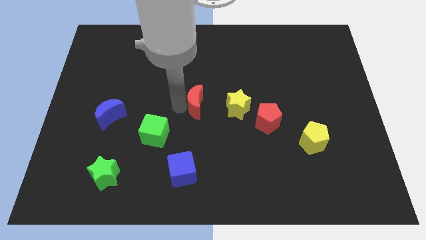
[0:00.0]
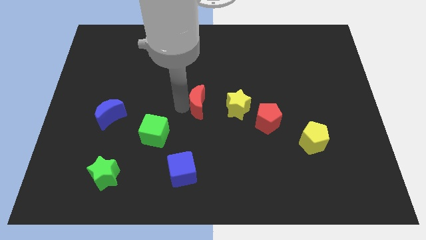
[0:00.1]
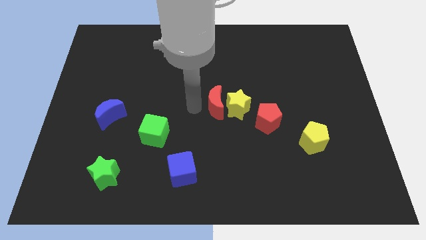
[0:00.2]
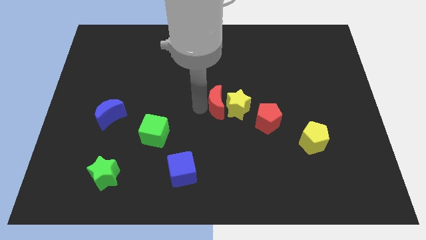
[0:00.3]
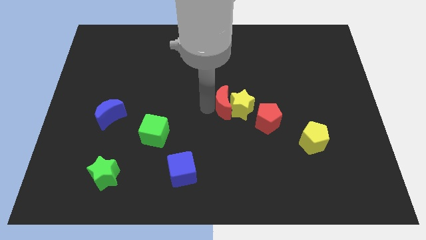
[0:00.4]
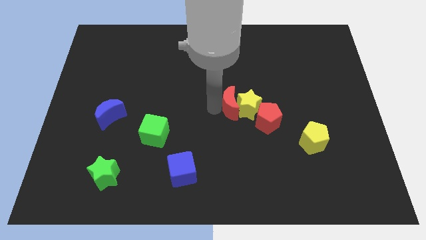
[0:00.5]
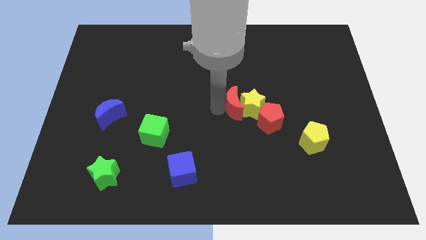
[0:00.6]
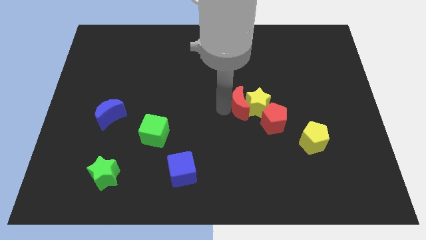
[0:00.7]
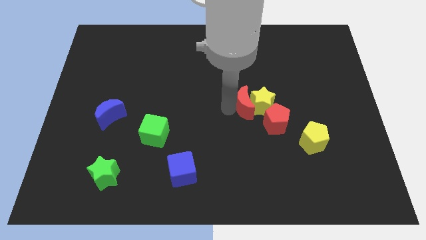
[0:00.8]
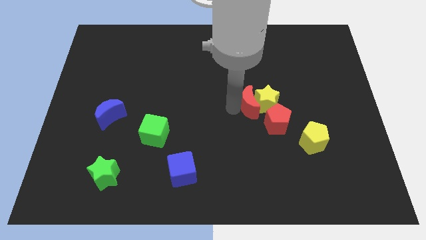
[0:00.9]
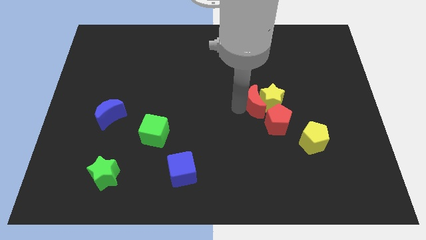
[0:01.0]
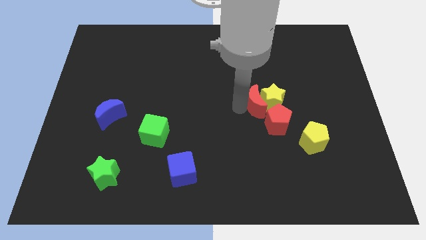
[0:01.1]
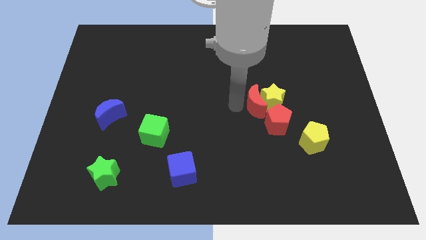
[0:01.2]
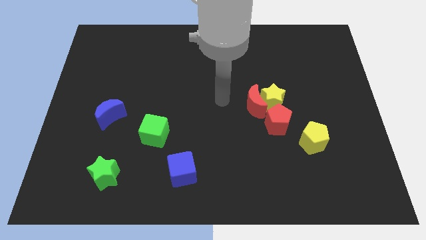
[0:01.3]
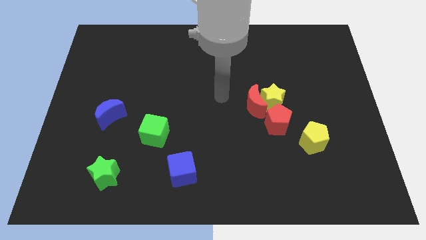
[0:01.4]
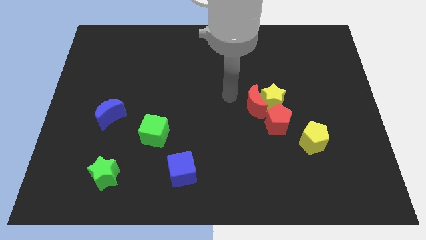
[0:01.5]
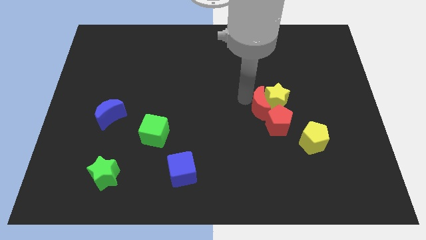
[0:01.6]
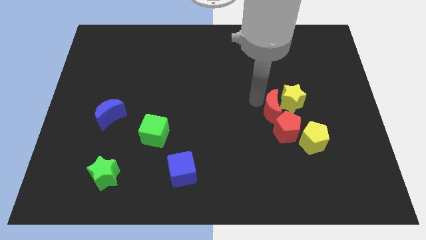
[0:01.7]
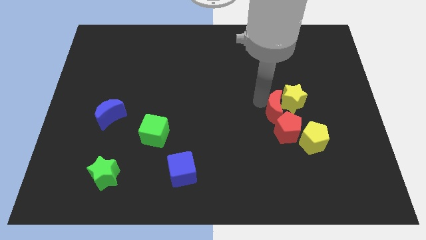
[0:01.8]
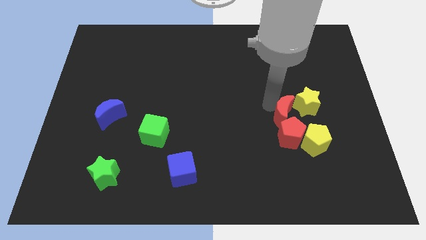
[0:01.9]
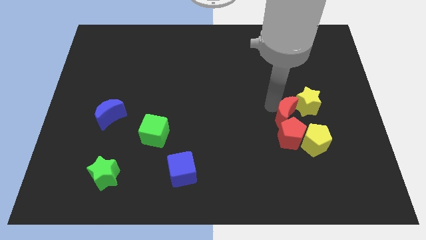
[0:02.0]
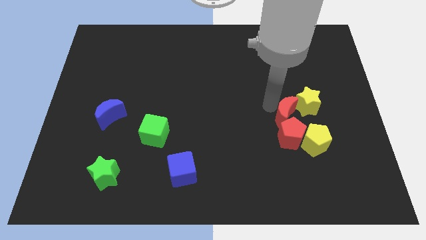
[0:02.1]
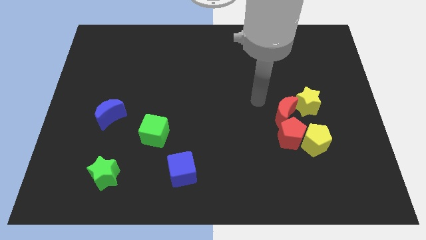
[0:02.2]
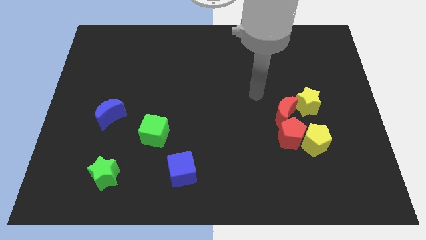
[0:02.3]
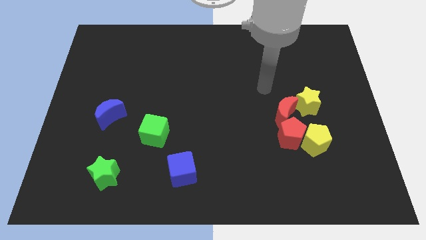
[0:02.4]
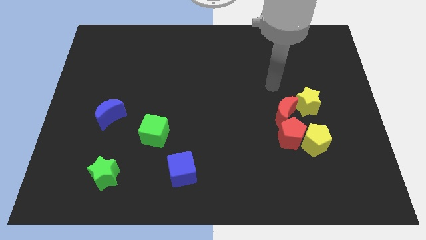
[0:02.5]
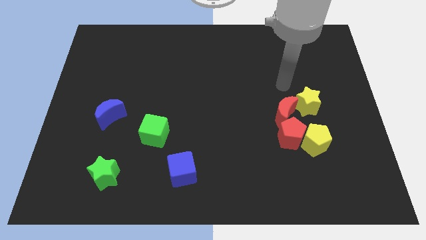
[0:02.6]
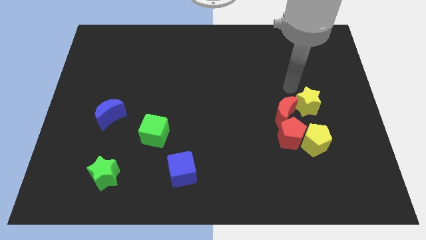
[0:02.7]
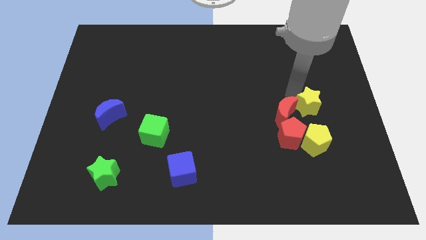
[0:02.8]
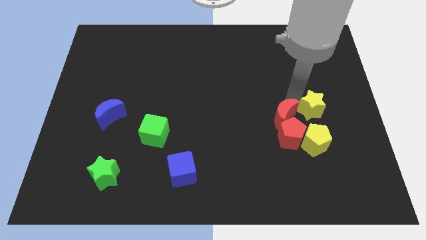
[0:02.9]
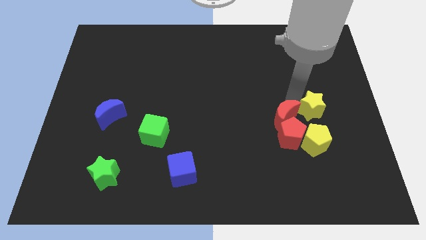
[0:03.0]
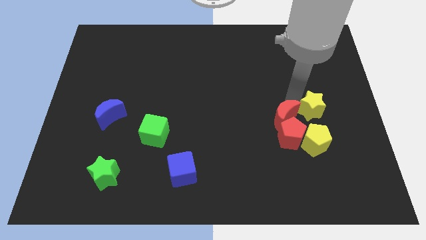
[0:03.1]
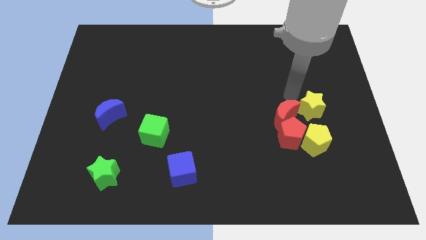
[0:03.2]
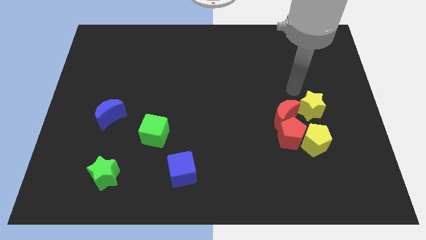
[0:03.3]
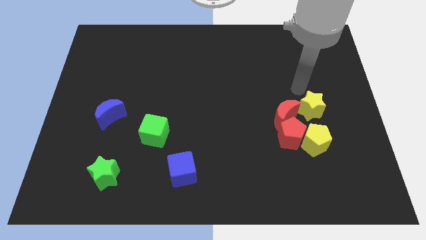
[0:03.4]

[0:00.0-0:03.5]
place the red pentagon to the left of yellow pentagon

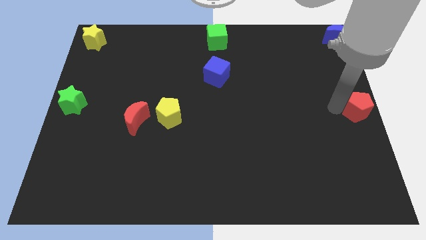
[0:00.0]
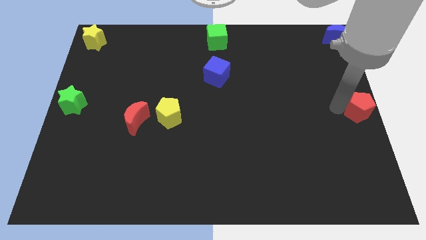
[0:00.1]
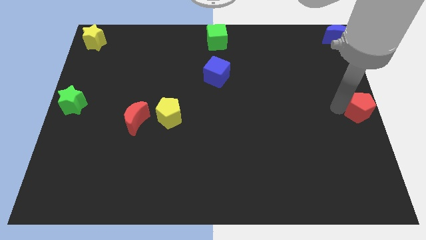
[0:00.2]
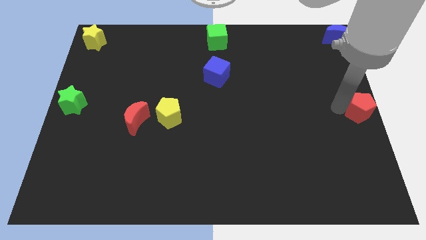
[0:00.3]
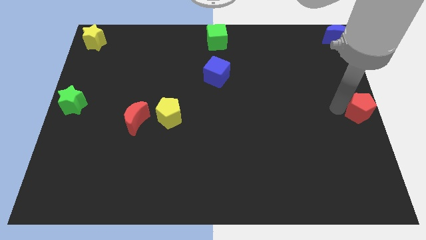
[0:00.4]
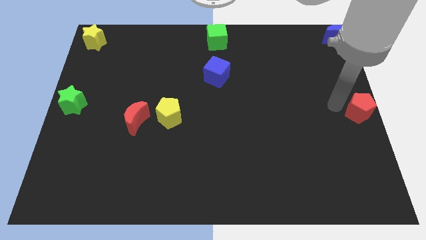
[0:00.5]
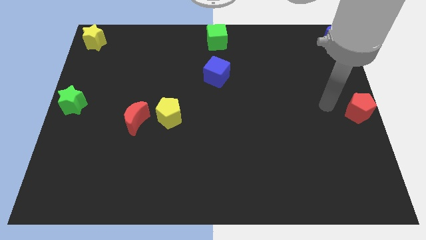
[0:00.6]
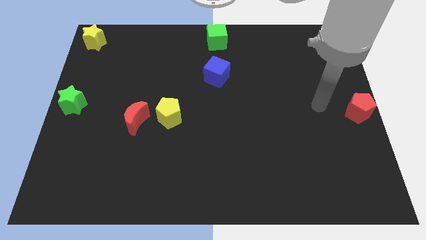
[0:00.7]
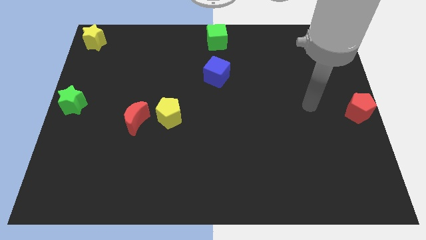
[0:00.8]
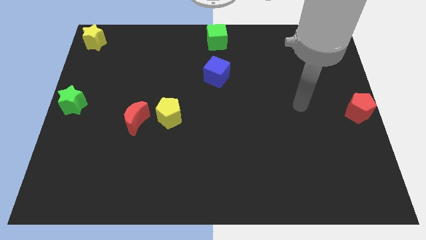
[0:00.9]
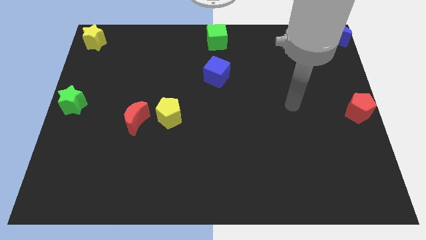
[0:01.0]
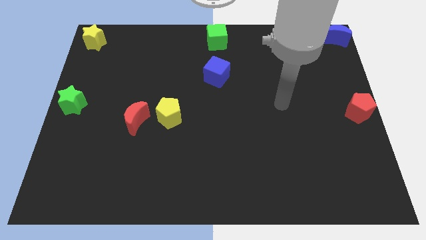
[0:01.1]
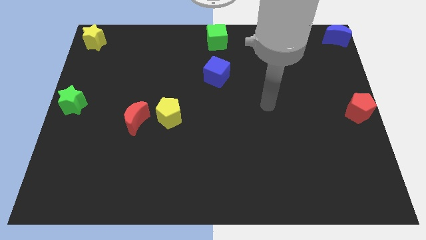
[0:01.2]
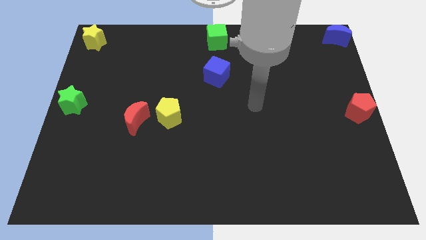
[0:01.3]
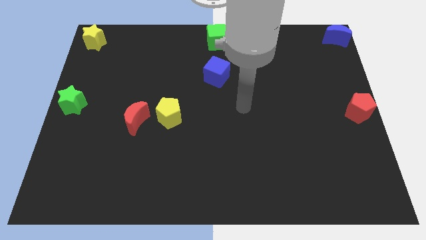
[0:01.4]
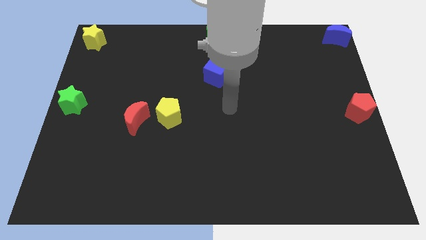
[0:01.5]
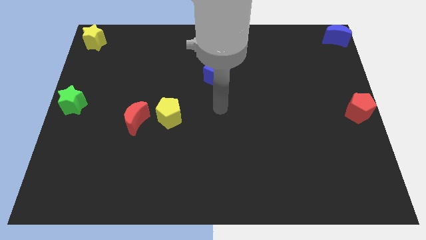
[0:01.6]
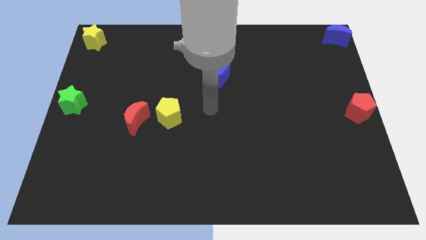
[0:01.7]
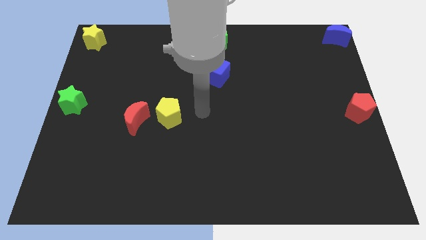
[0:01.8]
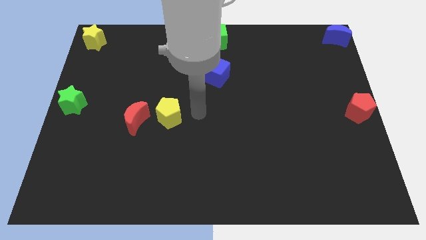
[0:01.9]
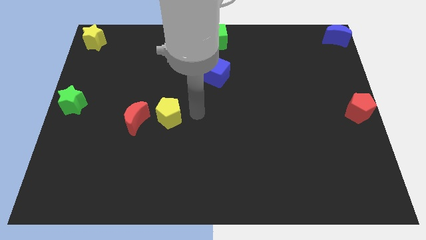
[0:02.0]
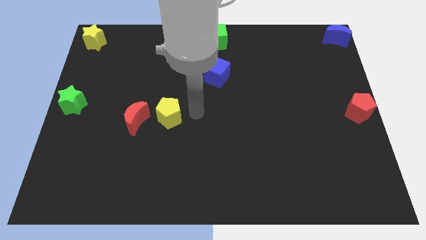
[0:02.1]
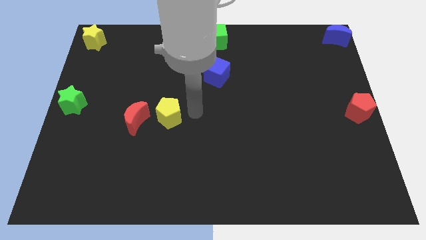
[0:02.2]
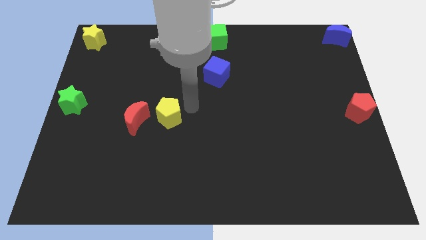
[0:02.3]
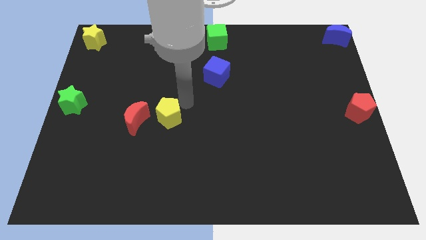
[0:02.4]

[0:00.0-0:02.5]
move your arm away from the red pentagon

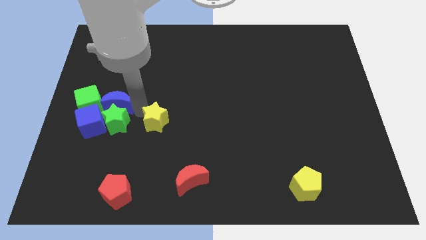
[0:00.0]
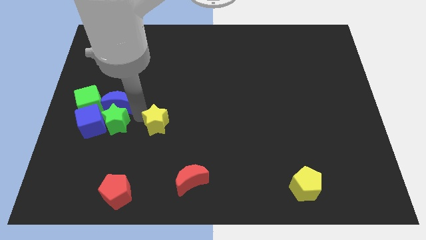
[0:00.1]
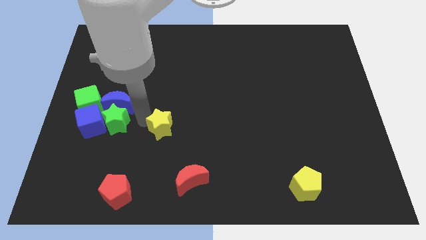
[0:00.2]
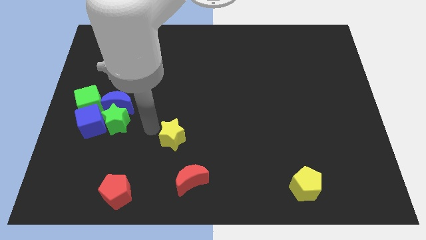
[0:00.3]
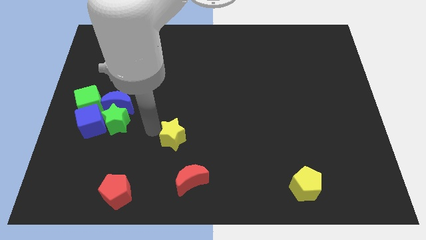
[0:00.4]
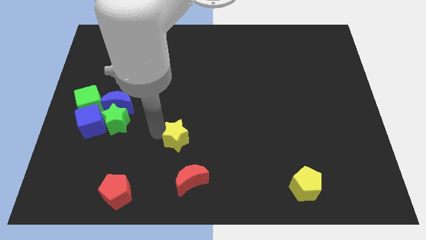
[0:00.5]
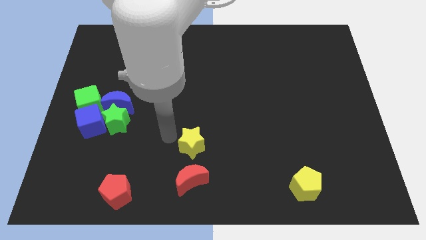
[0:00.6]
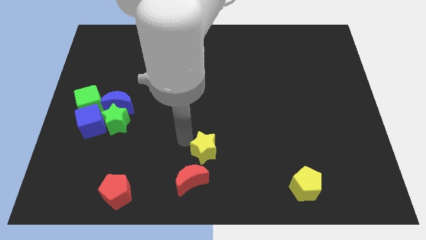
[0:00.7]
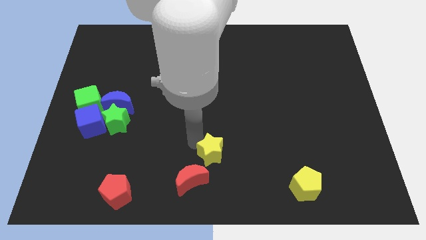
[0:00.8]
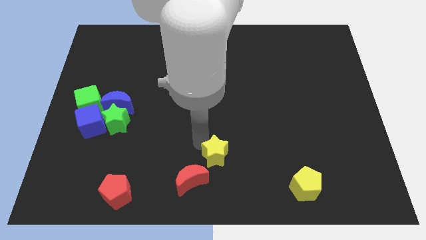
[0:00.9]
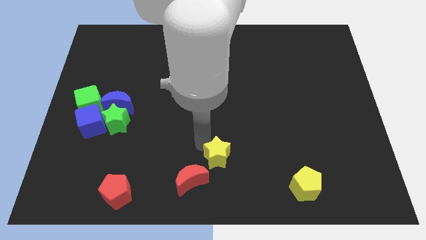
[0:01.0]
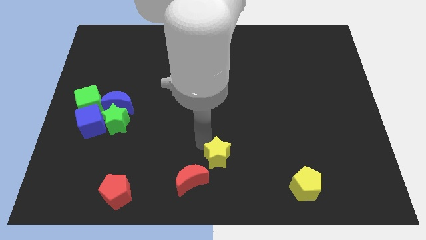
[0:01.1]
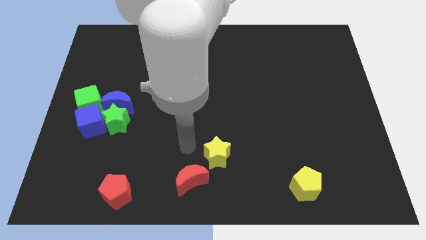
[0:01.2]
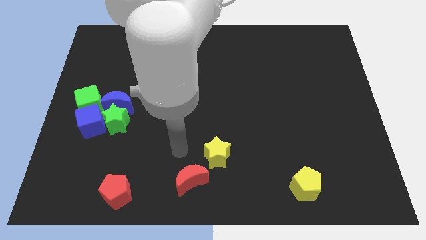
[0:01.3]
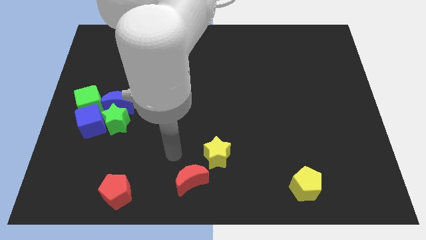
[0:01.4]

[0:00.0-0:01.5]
push the yellow star top right of the red crescent

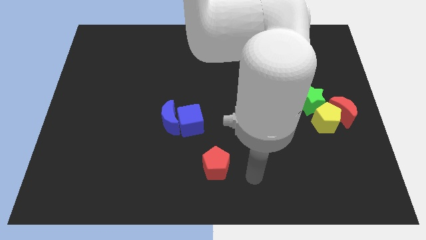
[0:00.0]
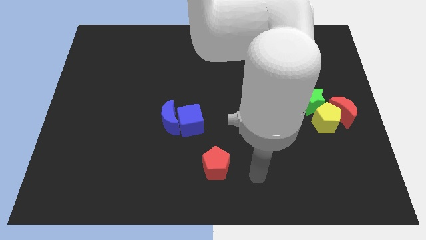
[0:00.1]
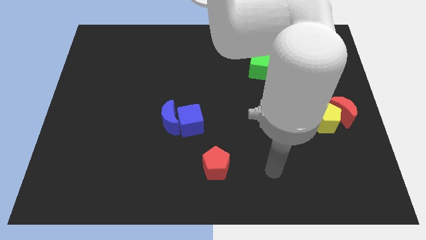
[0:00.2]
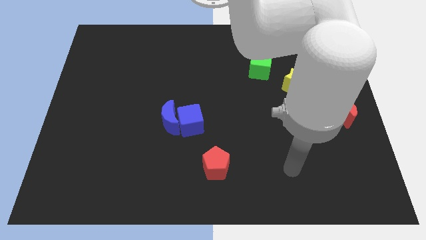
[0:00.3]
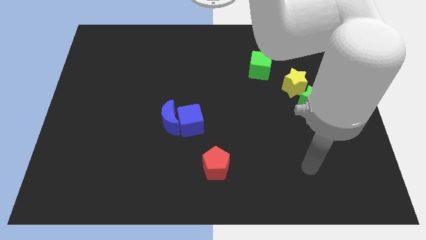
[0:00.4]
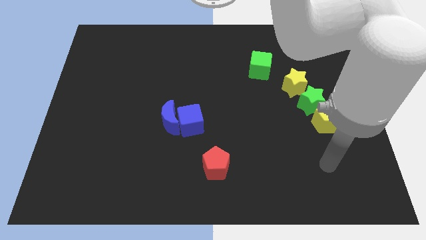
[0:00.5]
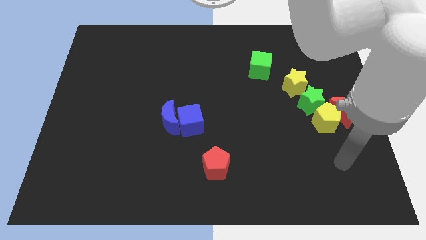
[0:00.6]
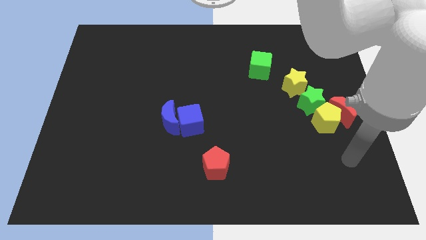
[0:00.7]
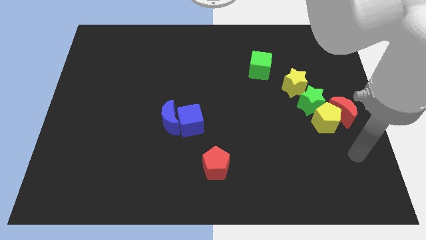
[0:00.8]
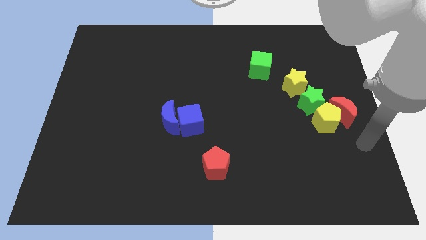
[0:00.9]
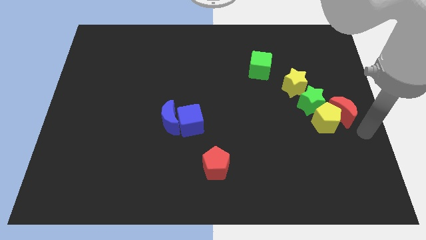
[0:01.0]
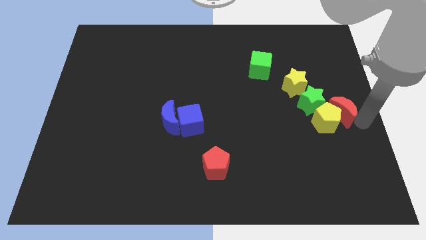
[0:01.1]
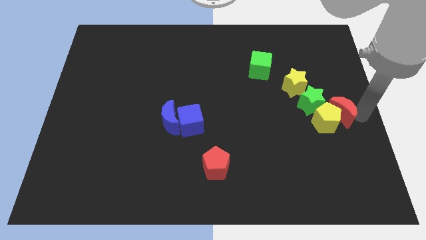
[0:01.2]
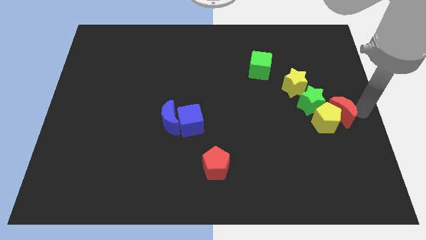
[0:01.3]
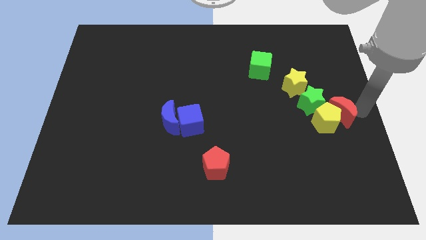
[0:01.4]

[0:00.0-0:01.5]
place your arm to the right of the red crescent
